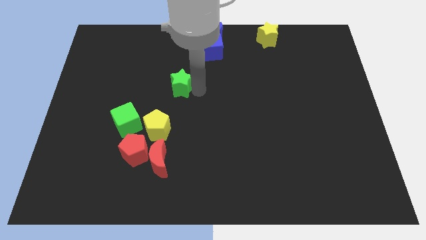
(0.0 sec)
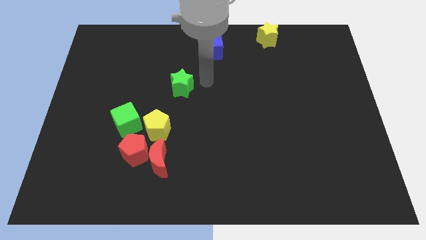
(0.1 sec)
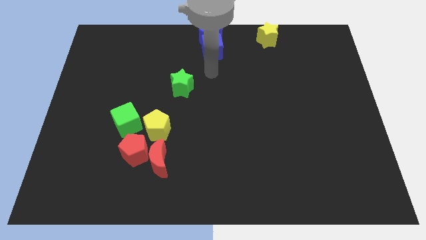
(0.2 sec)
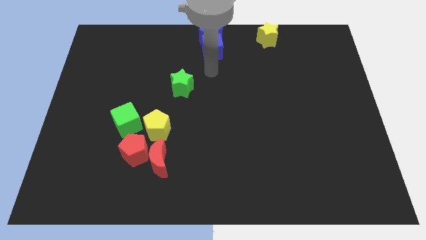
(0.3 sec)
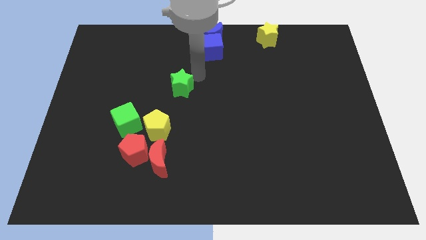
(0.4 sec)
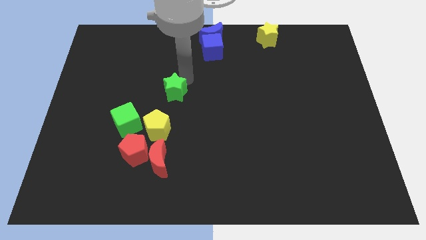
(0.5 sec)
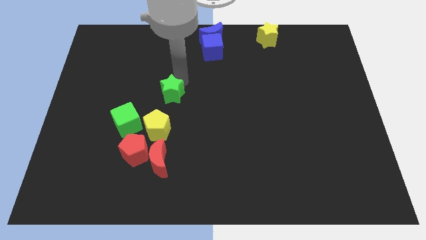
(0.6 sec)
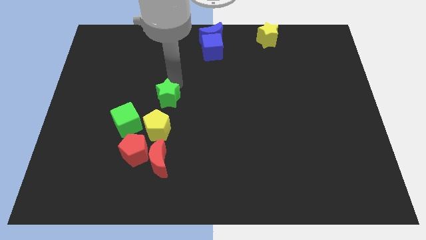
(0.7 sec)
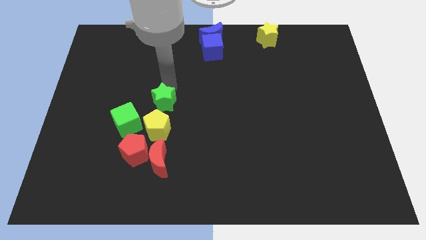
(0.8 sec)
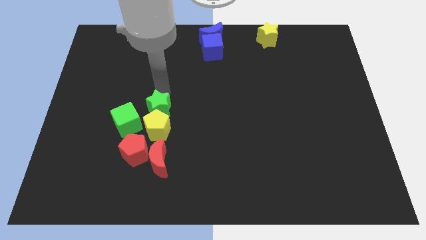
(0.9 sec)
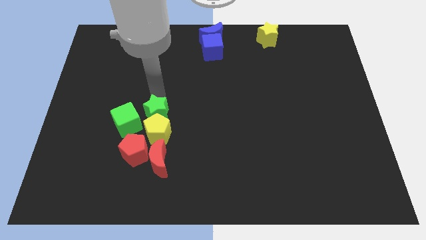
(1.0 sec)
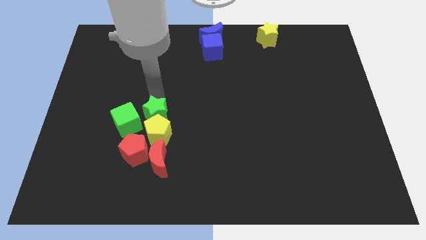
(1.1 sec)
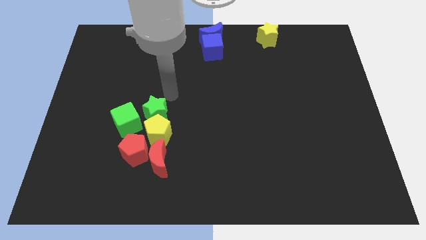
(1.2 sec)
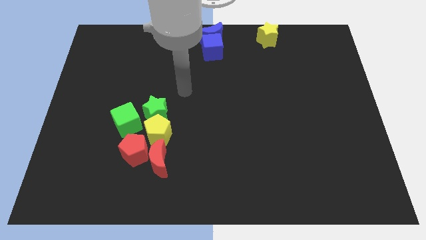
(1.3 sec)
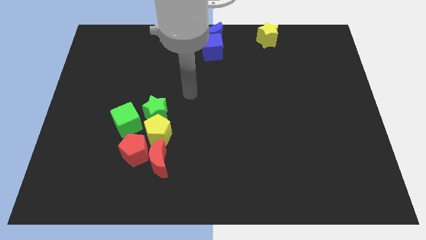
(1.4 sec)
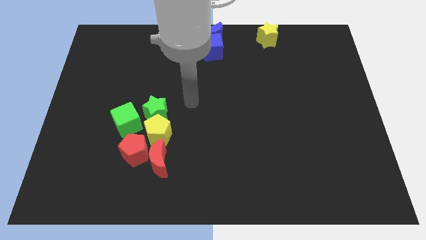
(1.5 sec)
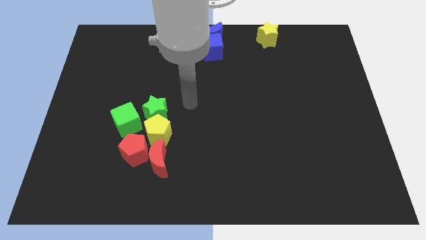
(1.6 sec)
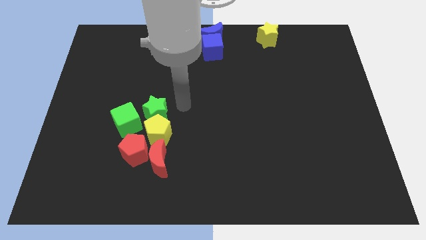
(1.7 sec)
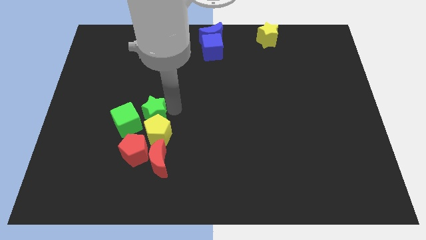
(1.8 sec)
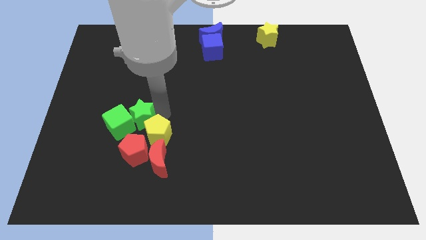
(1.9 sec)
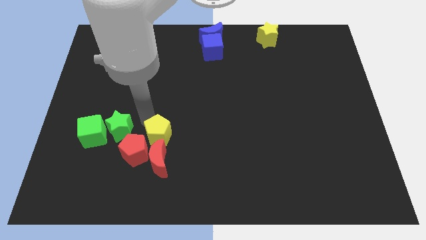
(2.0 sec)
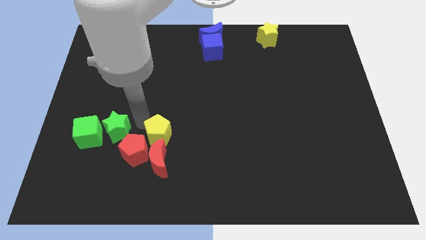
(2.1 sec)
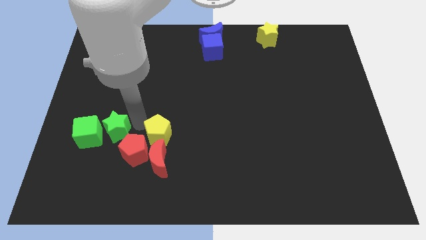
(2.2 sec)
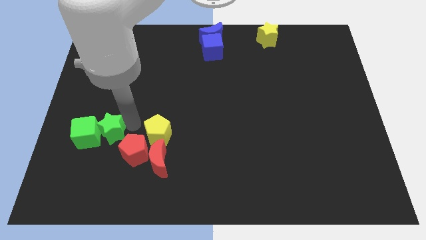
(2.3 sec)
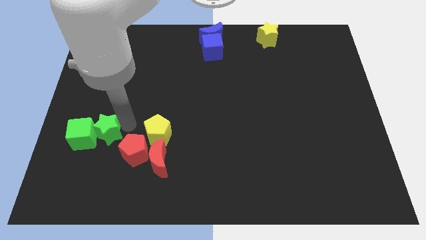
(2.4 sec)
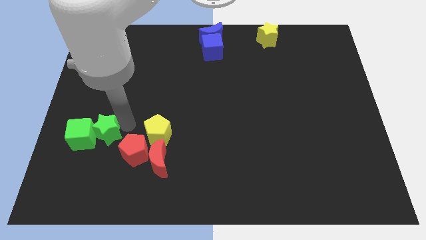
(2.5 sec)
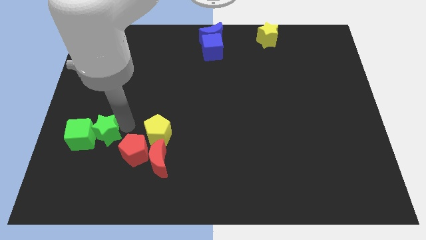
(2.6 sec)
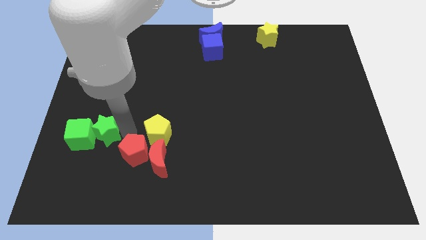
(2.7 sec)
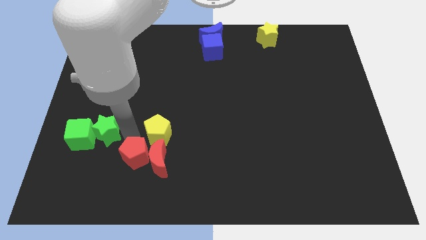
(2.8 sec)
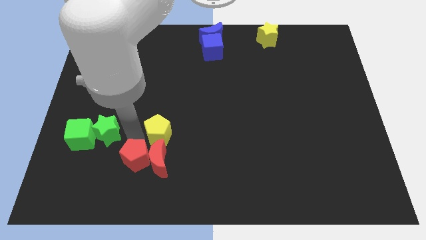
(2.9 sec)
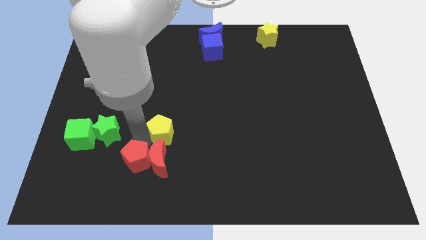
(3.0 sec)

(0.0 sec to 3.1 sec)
drag the green star and green cube towards the left side of the board

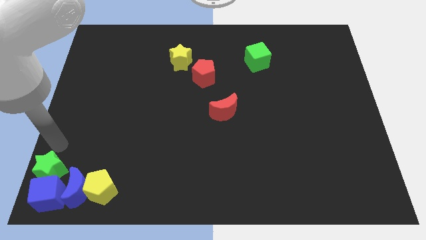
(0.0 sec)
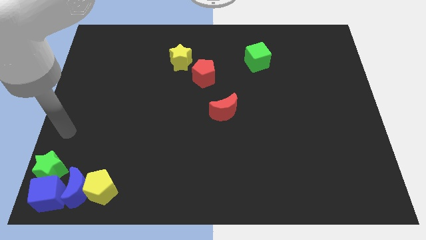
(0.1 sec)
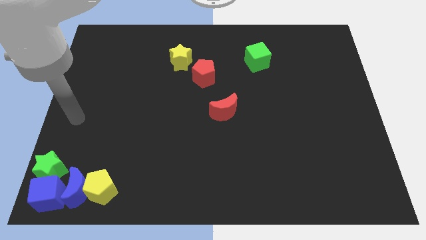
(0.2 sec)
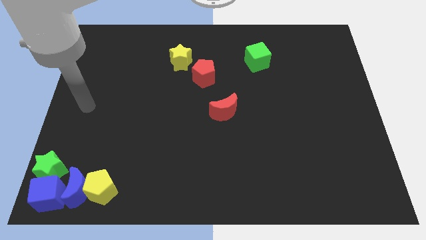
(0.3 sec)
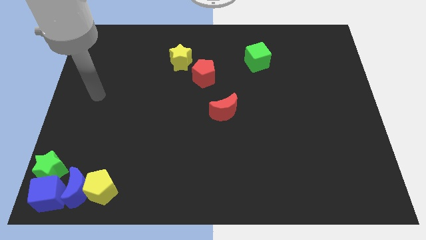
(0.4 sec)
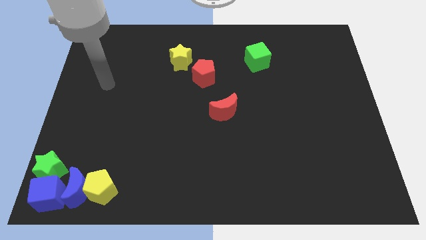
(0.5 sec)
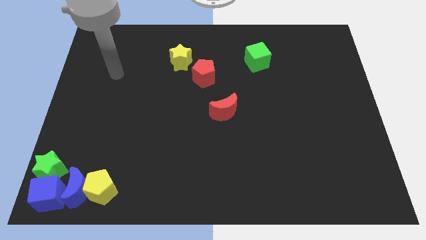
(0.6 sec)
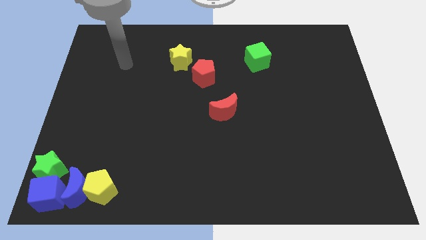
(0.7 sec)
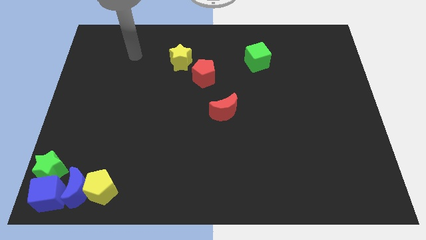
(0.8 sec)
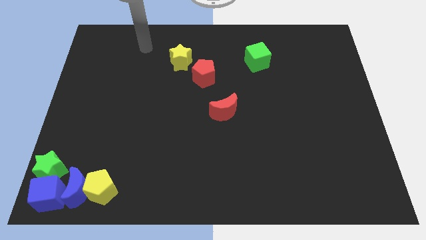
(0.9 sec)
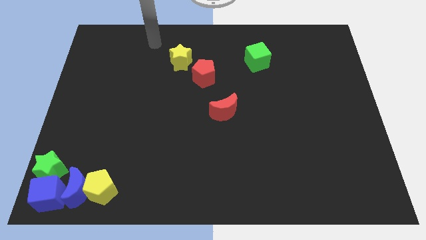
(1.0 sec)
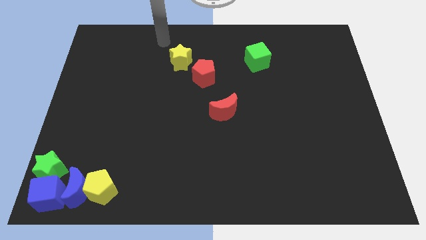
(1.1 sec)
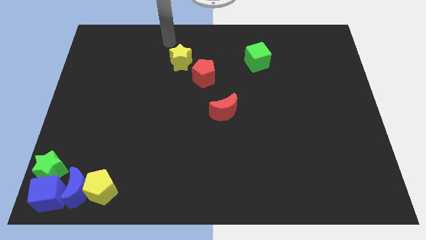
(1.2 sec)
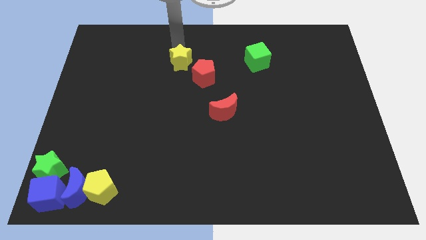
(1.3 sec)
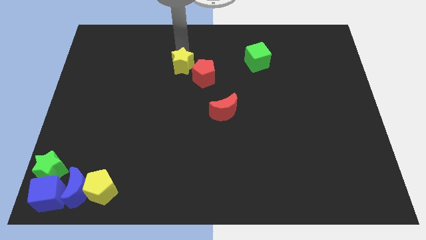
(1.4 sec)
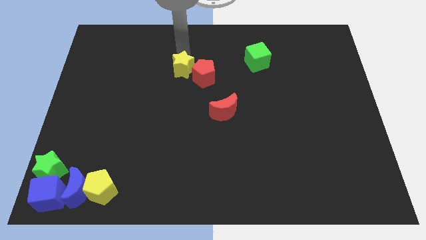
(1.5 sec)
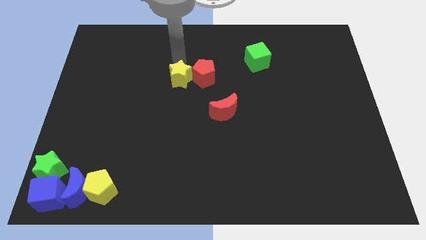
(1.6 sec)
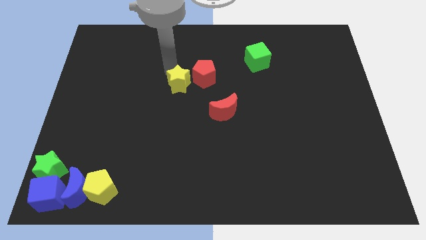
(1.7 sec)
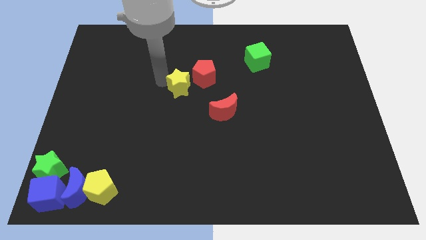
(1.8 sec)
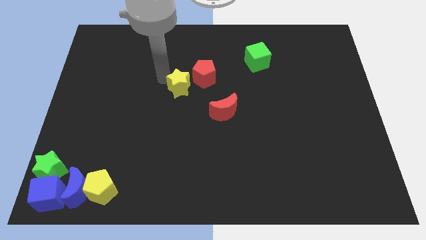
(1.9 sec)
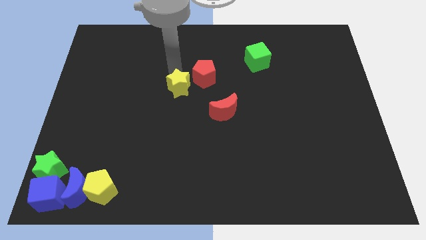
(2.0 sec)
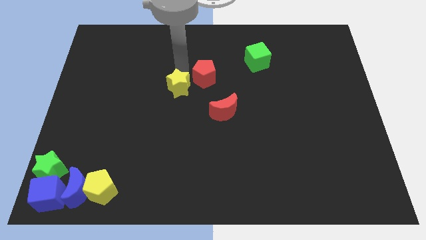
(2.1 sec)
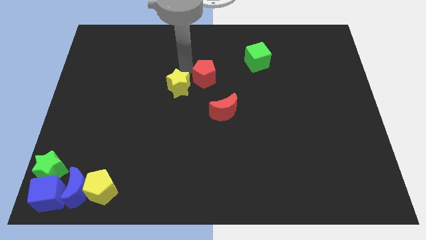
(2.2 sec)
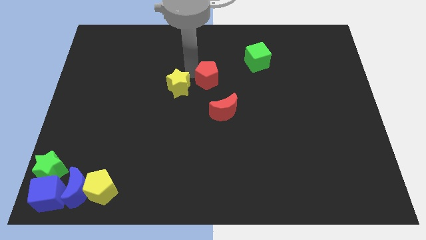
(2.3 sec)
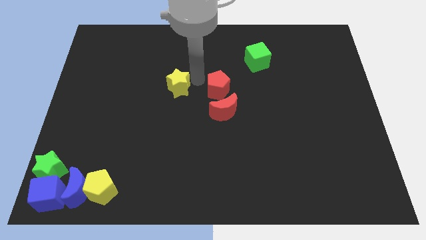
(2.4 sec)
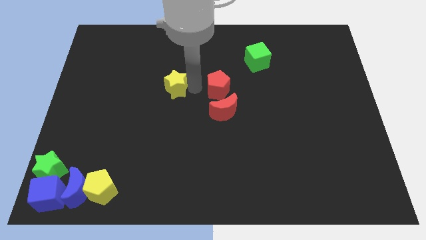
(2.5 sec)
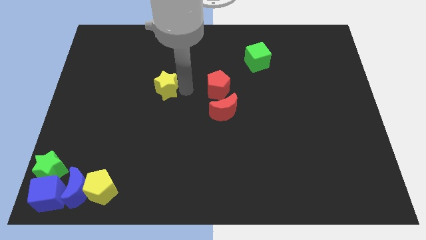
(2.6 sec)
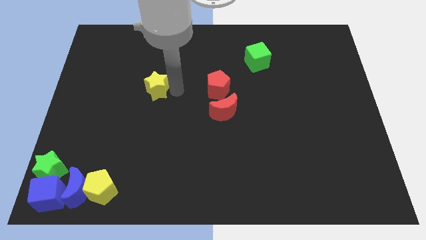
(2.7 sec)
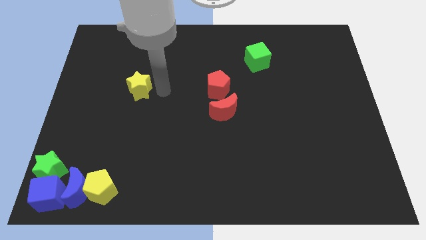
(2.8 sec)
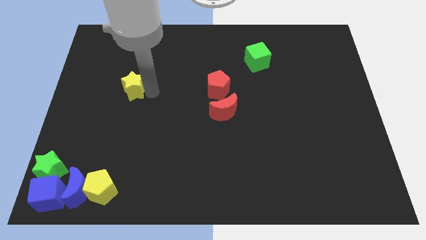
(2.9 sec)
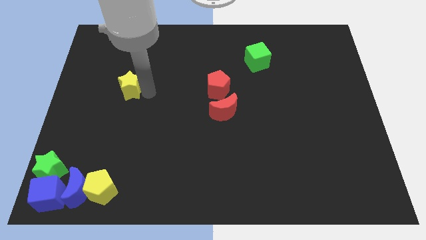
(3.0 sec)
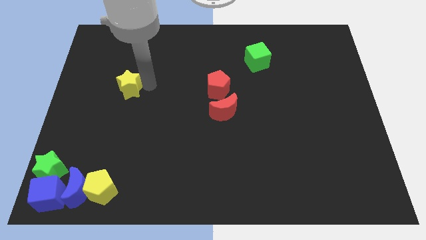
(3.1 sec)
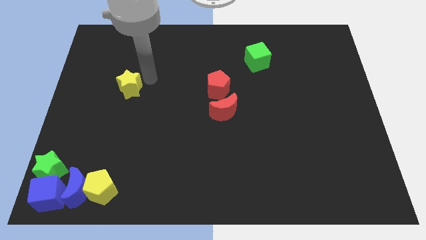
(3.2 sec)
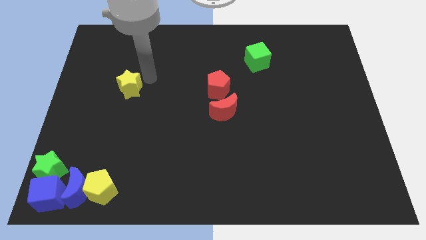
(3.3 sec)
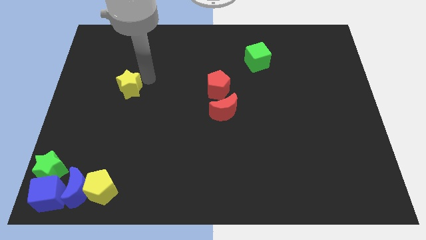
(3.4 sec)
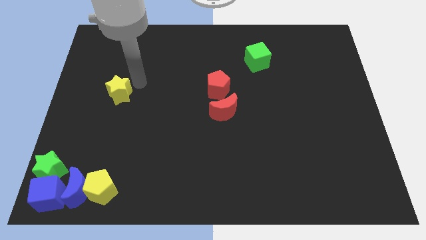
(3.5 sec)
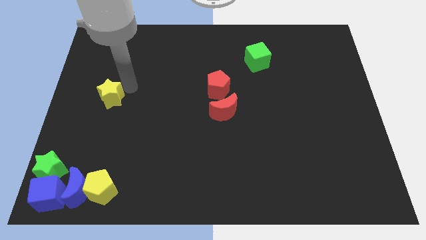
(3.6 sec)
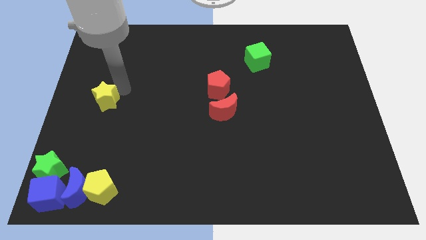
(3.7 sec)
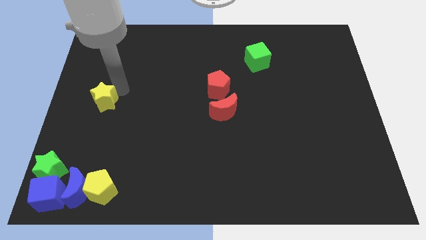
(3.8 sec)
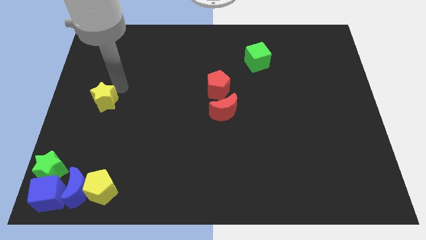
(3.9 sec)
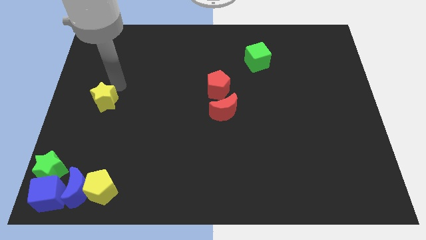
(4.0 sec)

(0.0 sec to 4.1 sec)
slide the yellow star to the left side of the table

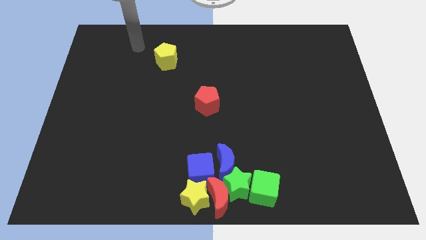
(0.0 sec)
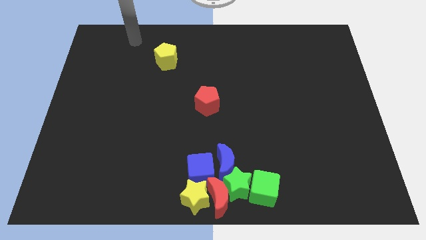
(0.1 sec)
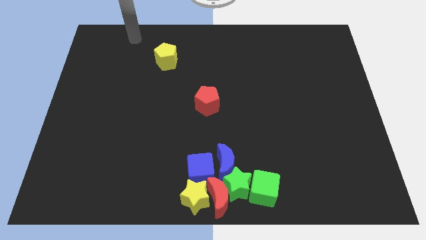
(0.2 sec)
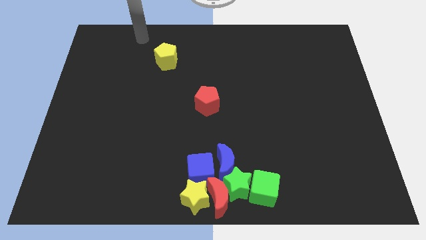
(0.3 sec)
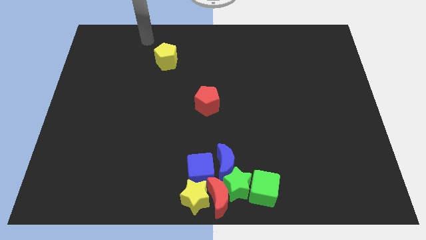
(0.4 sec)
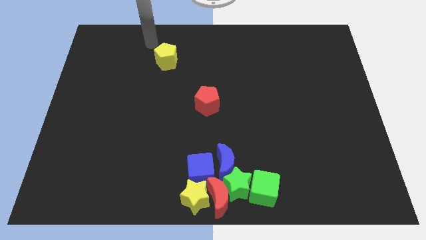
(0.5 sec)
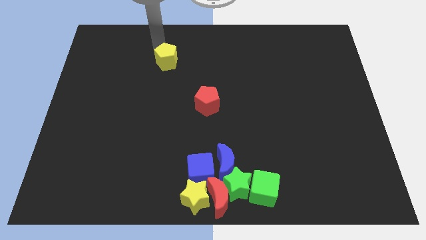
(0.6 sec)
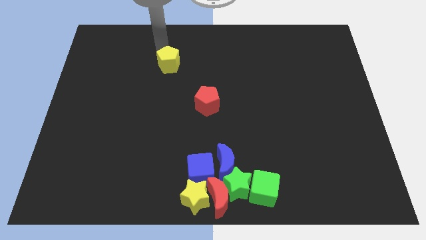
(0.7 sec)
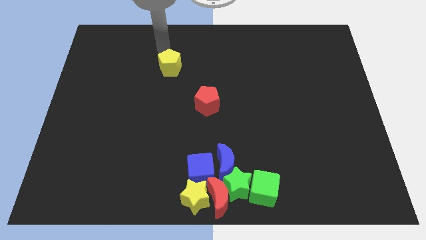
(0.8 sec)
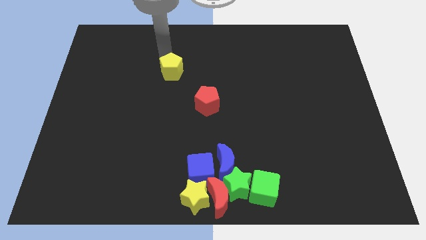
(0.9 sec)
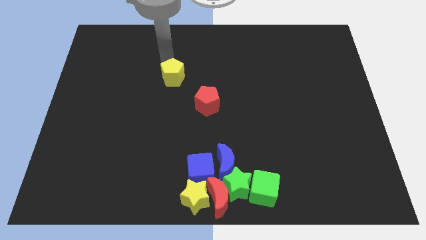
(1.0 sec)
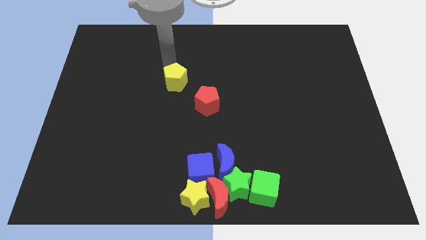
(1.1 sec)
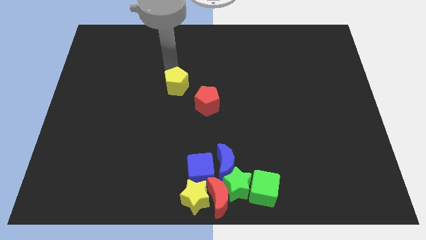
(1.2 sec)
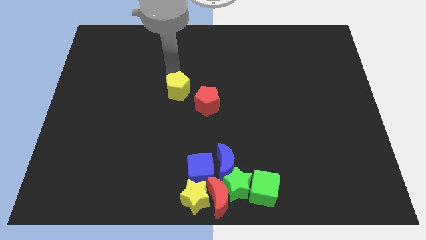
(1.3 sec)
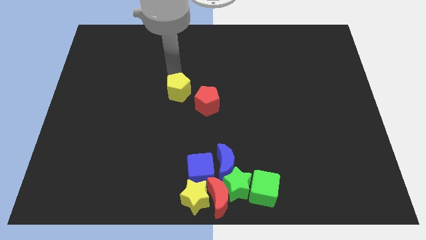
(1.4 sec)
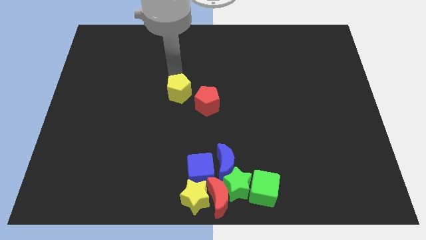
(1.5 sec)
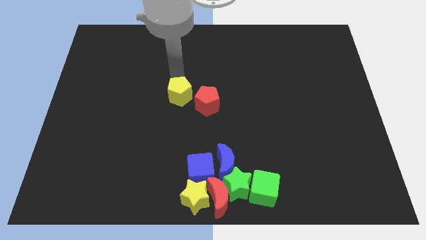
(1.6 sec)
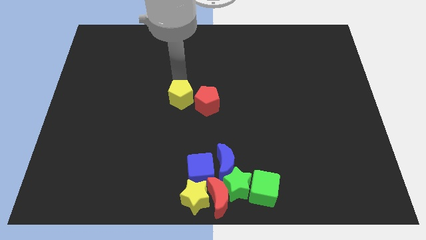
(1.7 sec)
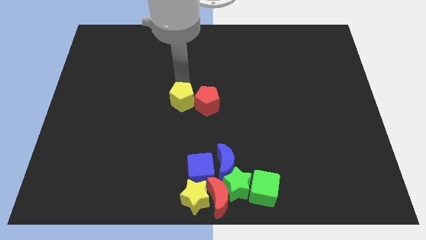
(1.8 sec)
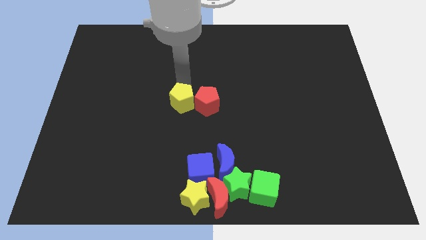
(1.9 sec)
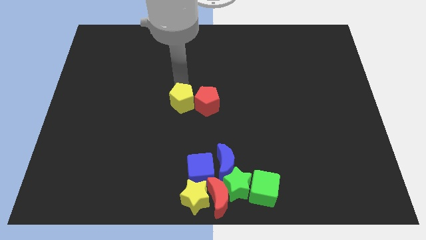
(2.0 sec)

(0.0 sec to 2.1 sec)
push the yellow pentagon to the left side of the red pentagon
